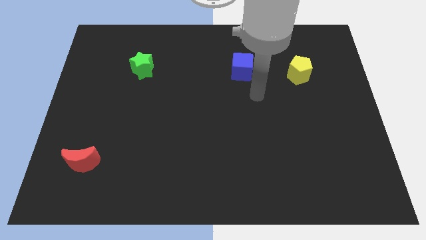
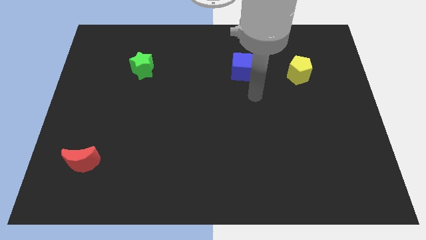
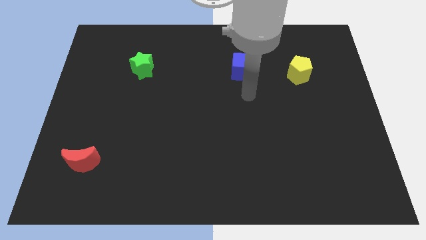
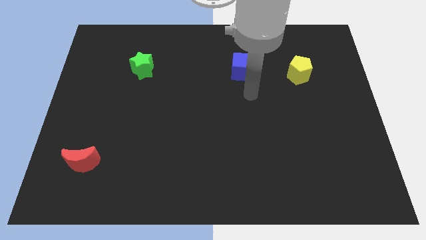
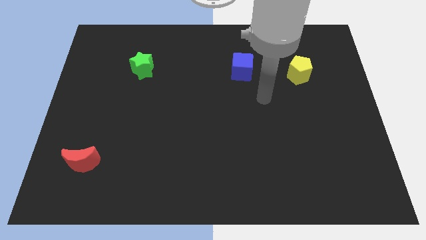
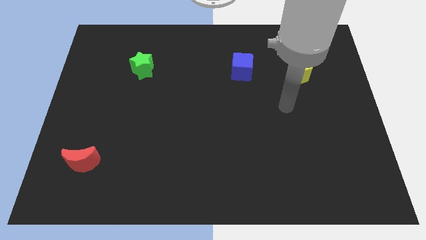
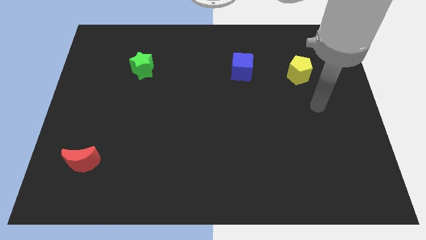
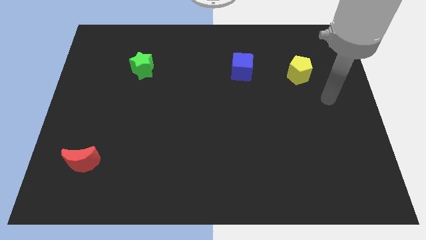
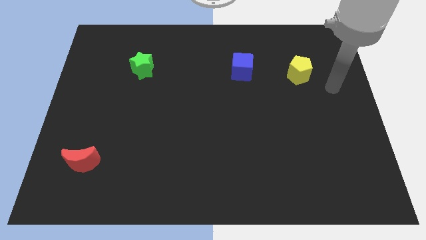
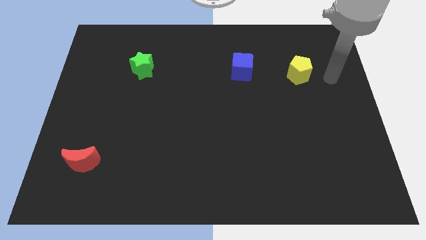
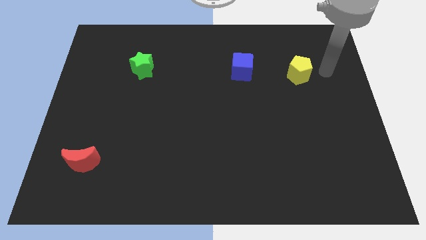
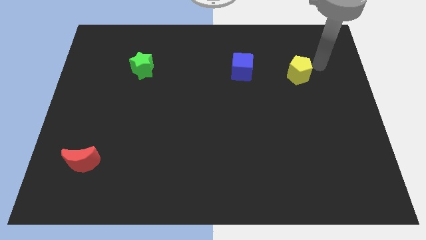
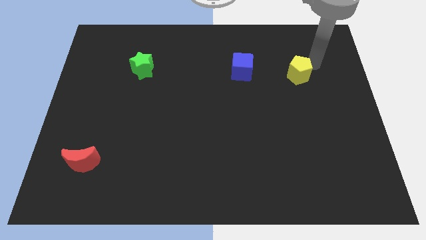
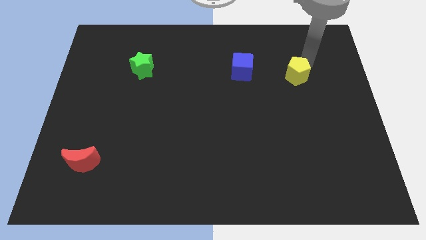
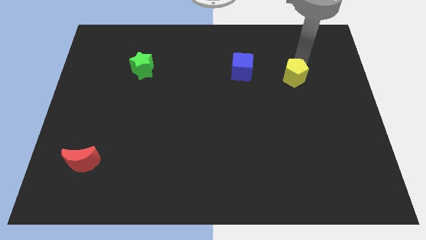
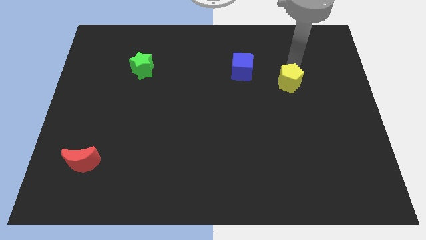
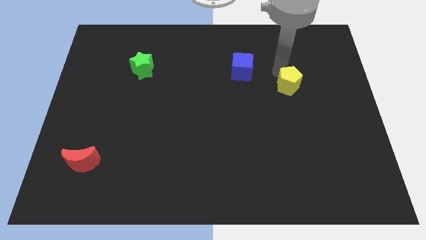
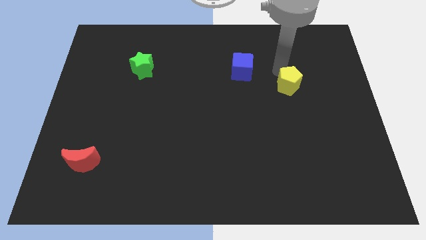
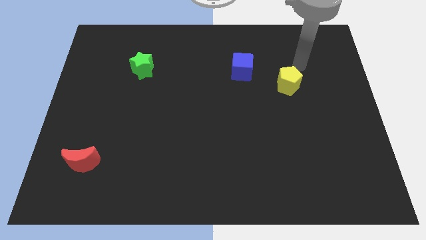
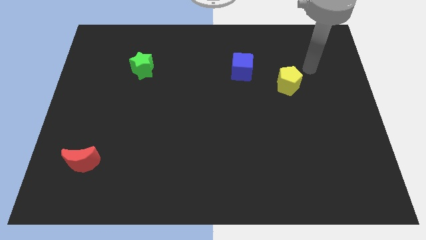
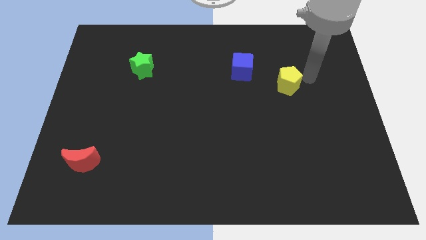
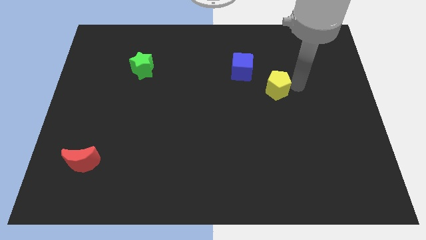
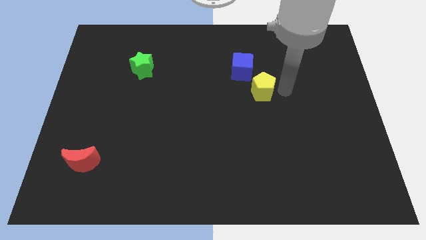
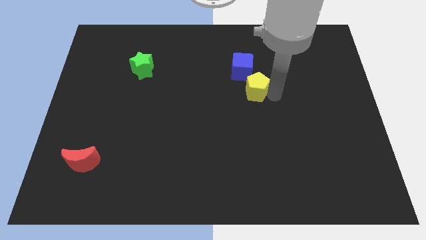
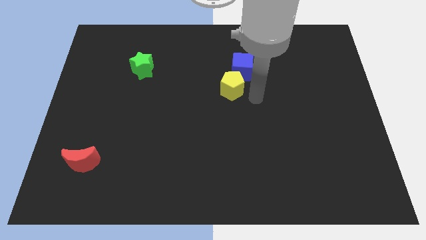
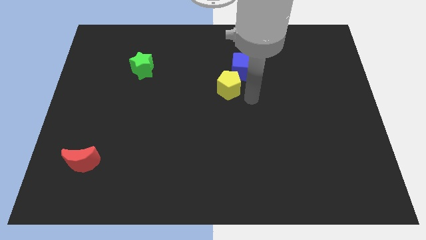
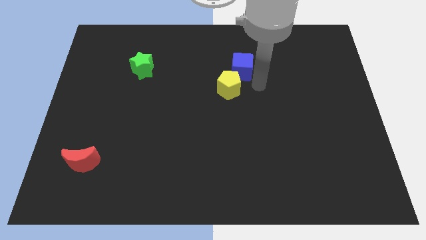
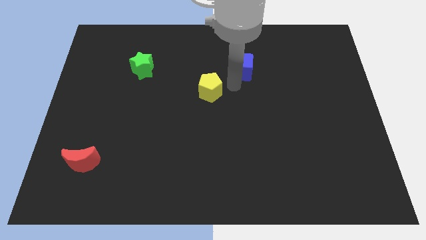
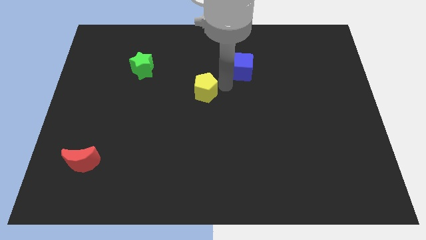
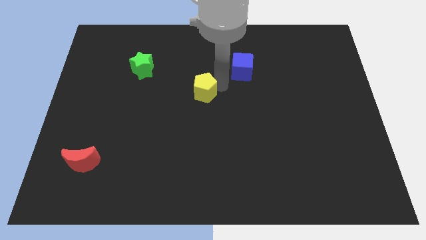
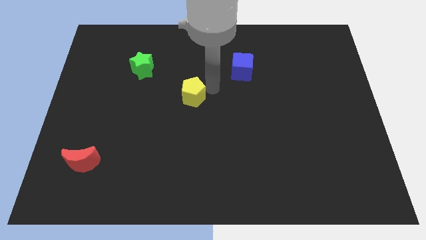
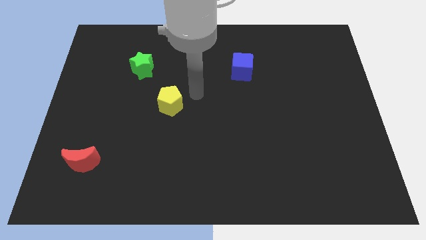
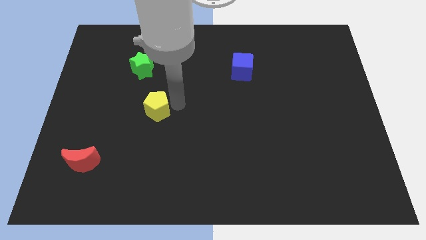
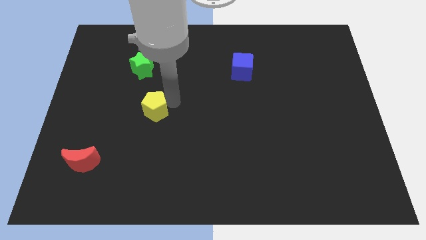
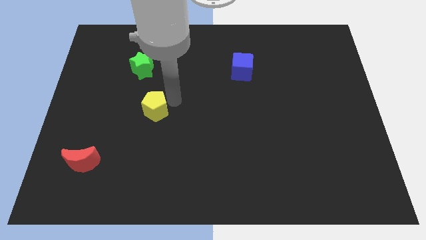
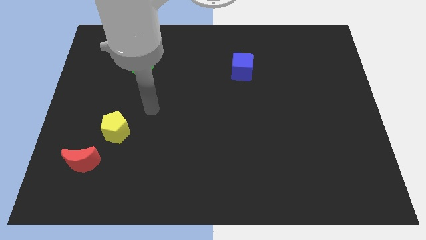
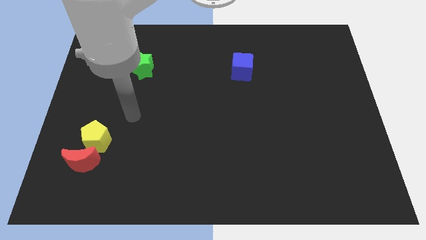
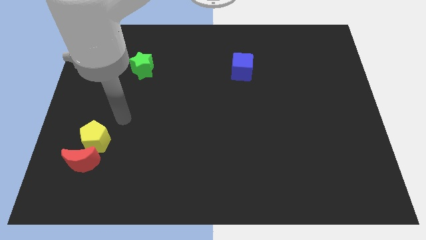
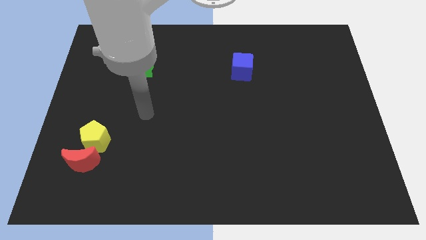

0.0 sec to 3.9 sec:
move the pentagon next to the moon

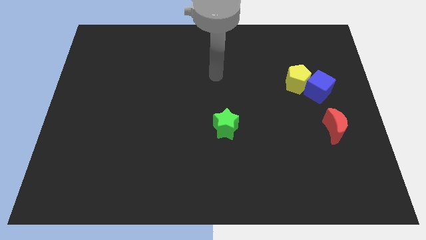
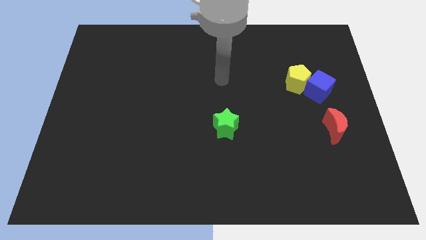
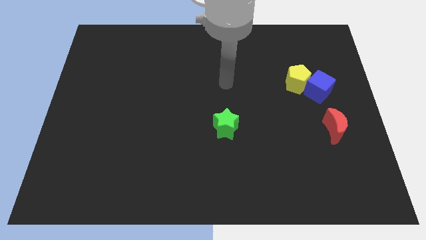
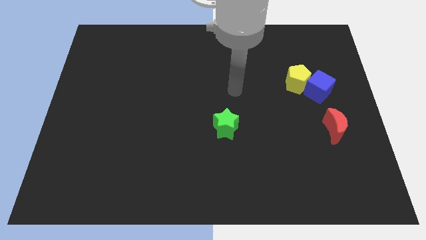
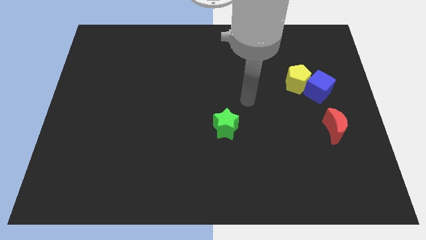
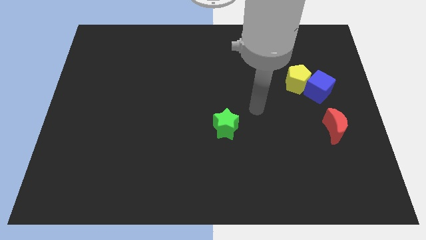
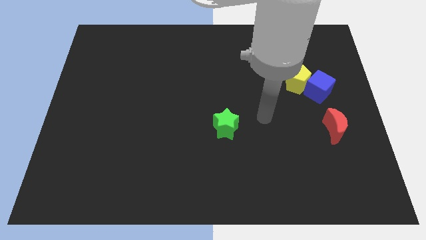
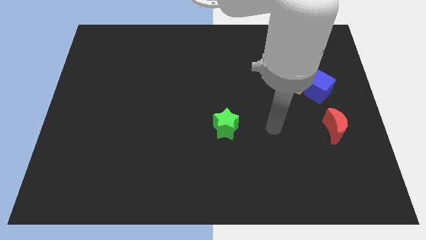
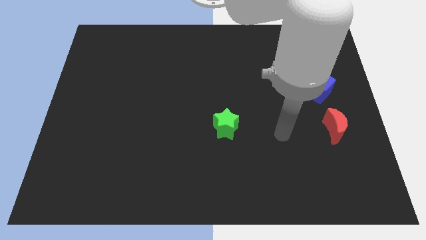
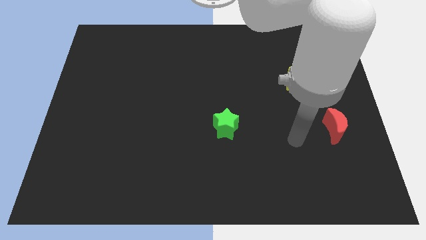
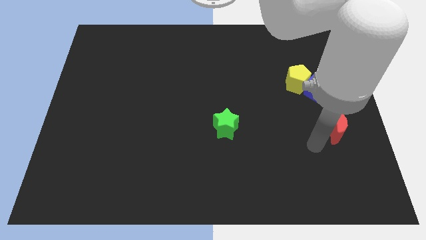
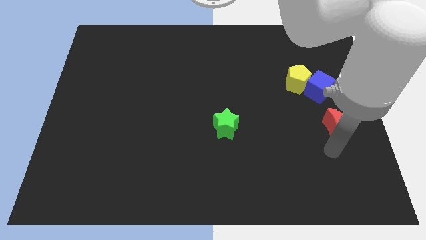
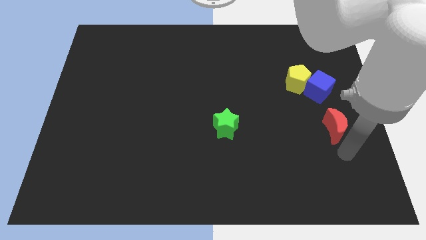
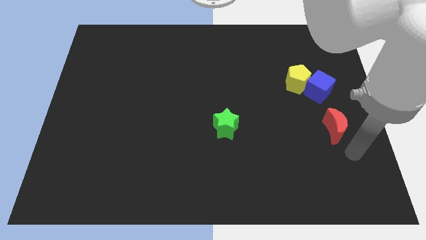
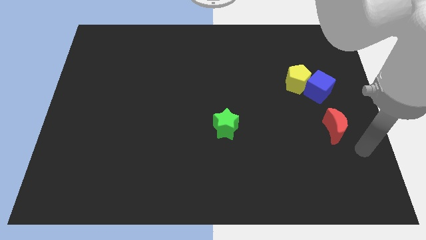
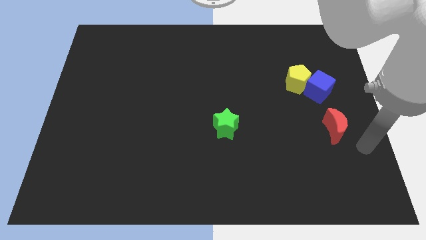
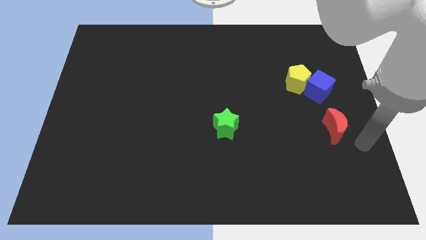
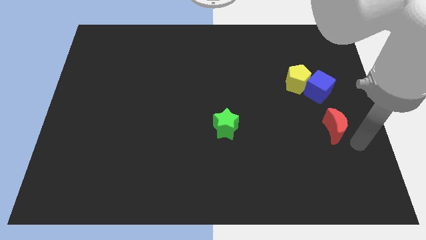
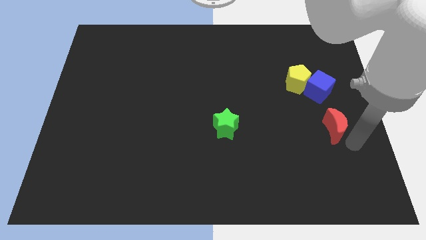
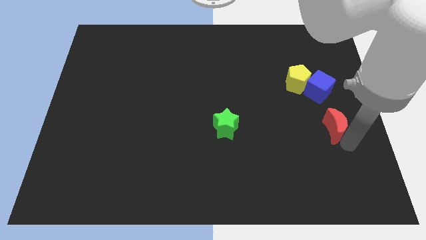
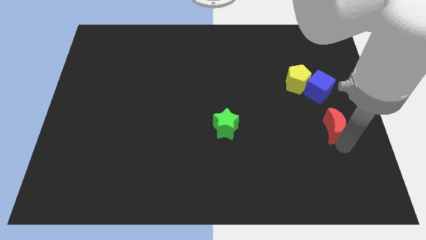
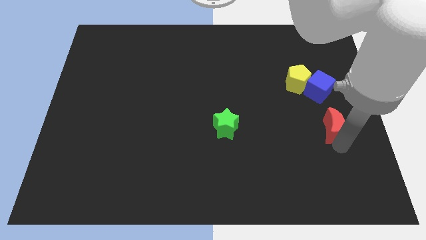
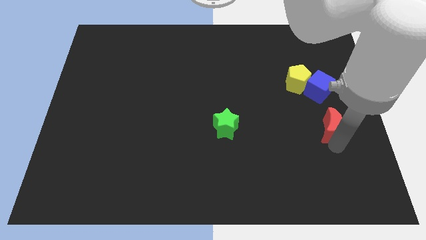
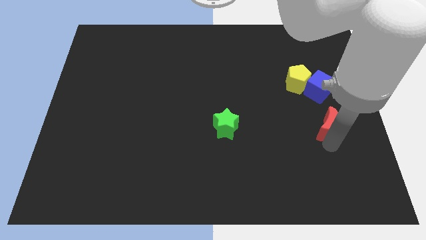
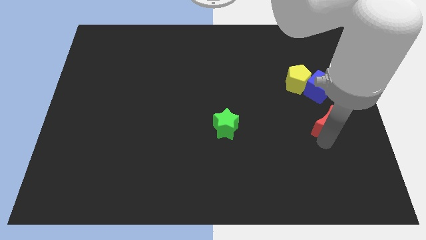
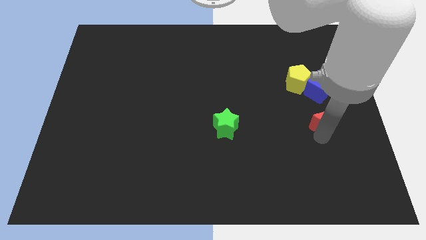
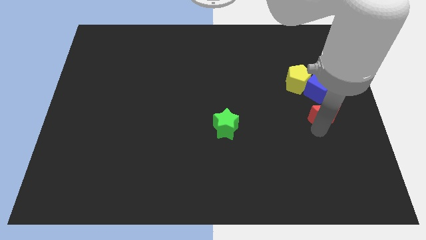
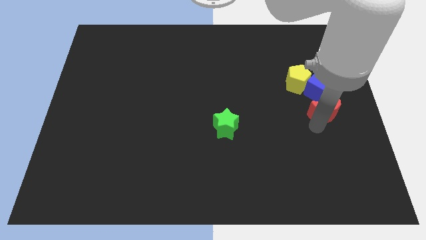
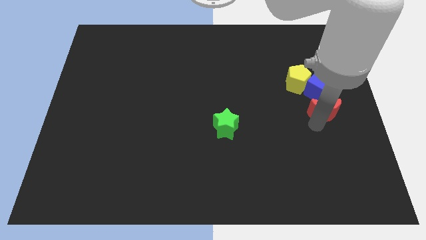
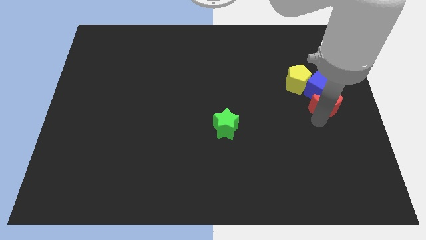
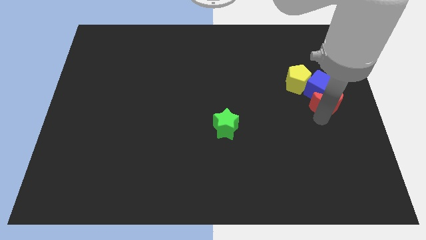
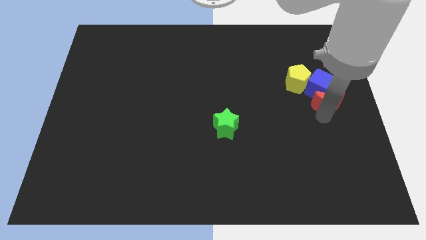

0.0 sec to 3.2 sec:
push the moon close to the cube

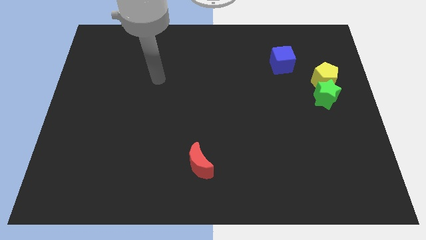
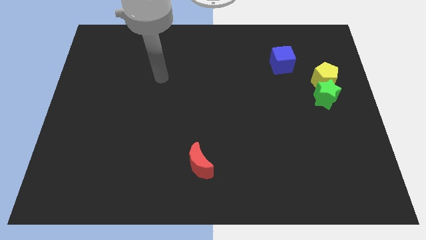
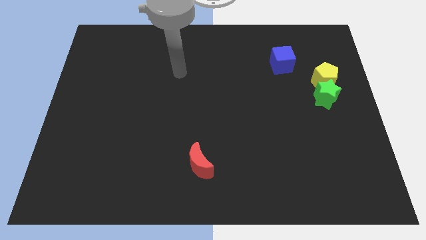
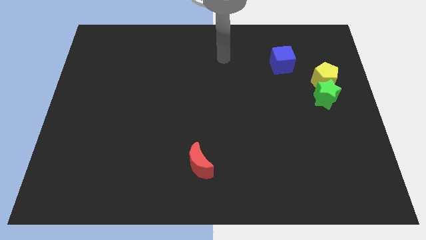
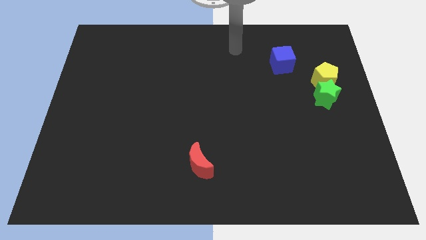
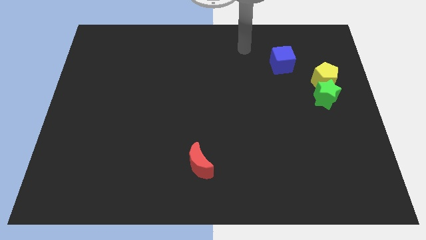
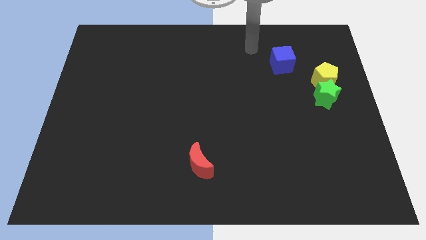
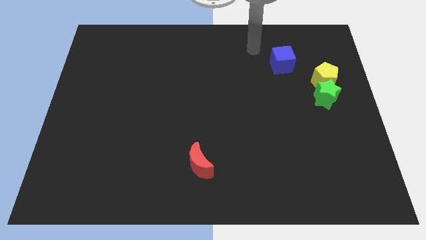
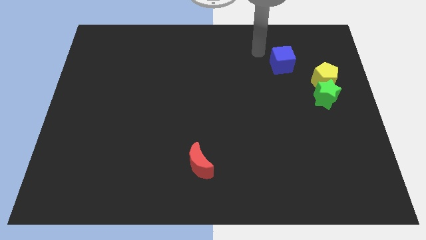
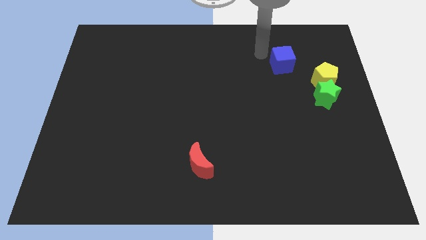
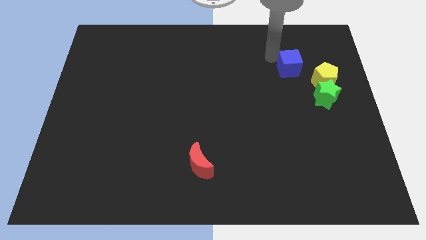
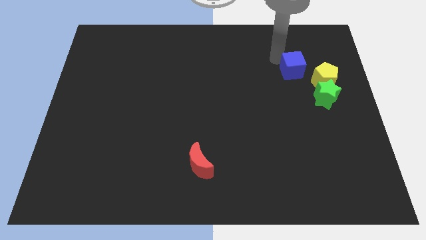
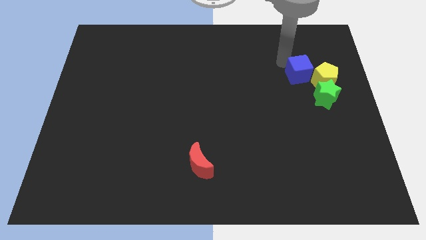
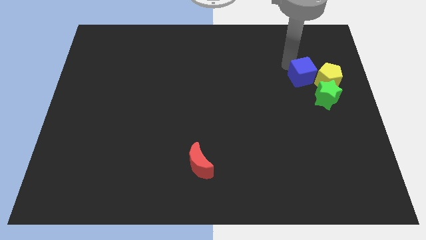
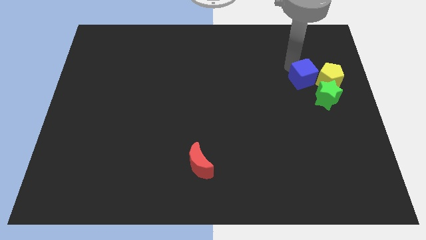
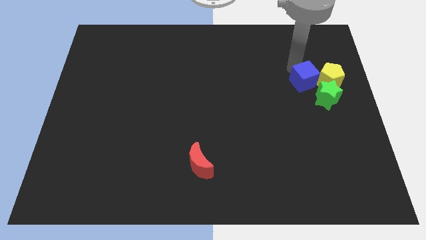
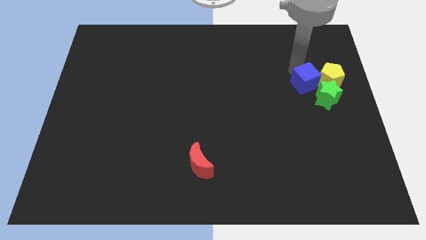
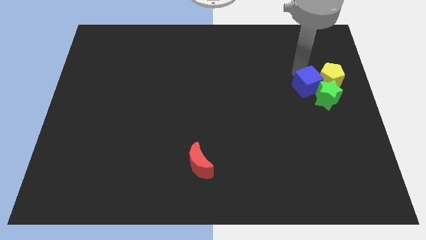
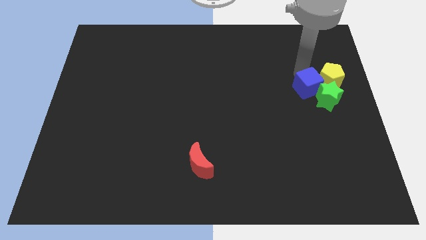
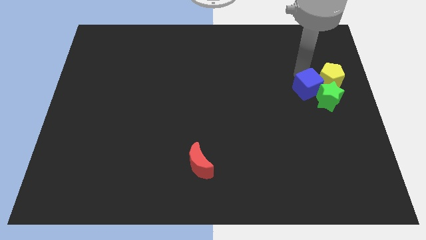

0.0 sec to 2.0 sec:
push the cube towards the green star
